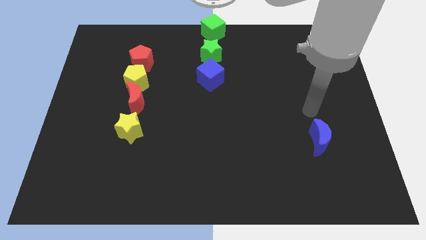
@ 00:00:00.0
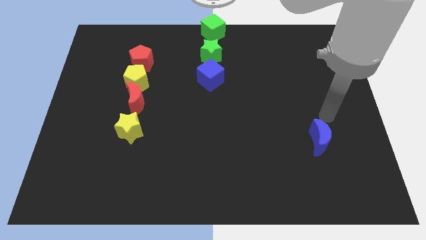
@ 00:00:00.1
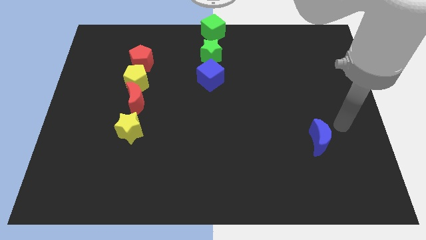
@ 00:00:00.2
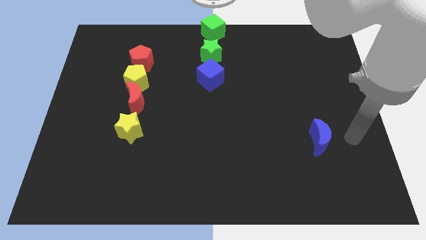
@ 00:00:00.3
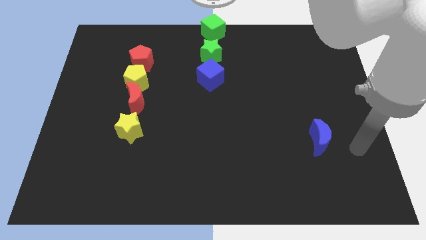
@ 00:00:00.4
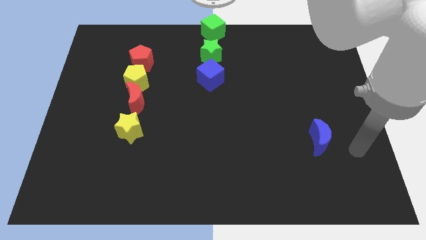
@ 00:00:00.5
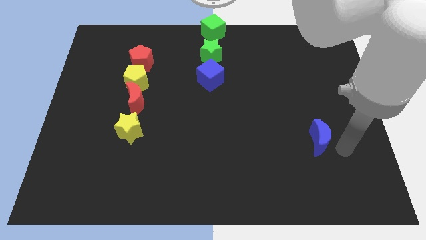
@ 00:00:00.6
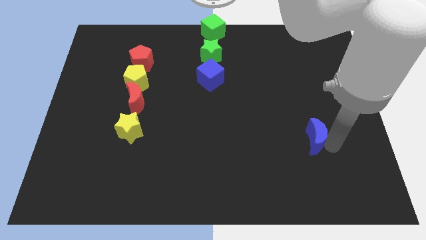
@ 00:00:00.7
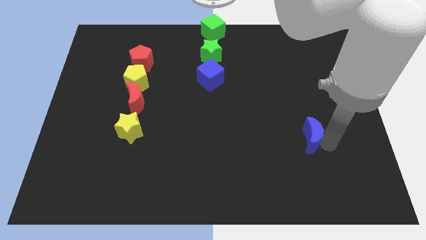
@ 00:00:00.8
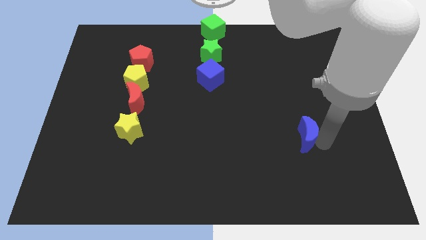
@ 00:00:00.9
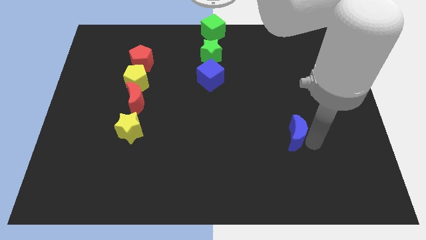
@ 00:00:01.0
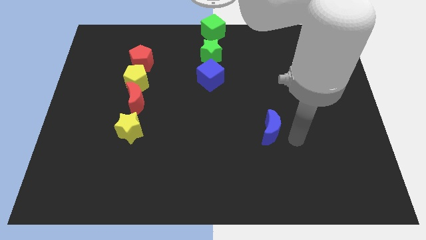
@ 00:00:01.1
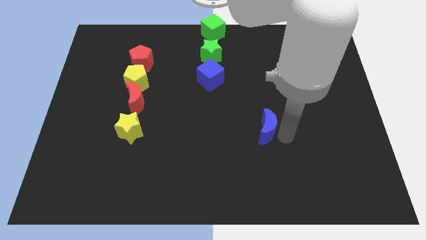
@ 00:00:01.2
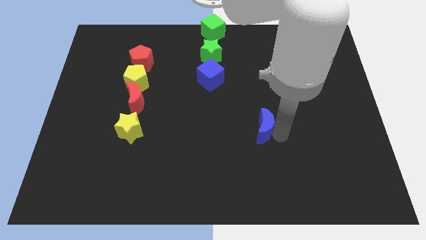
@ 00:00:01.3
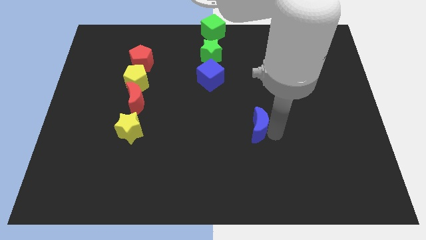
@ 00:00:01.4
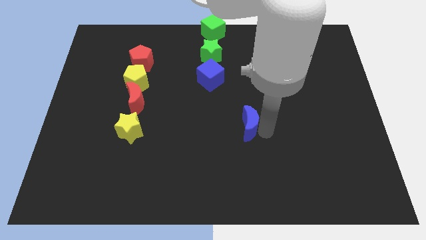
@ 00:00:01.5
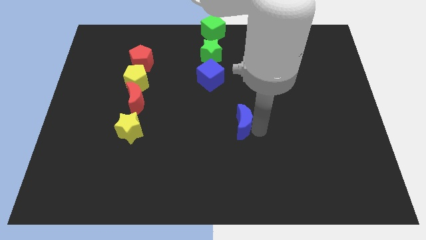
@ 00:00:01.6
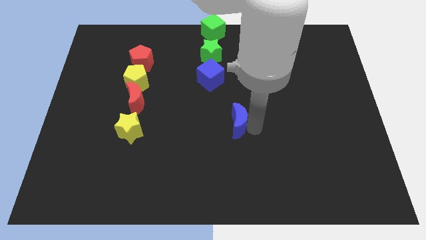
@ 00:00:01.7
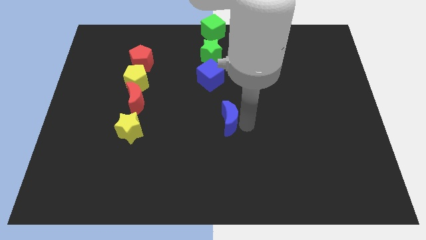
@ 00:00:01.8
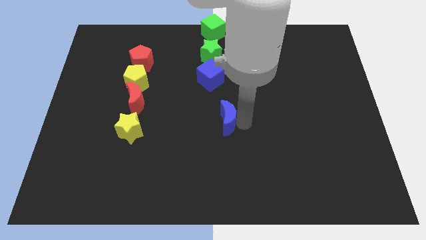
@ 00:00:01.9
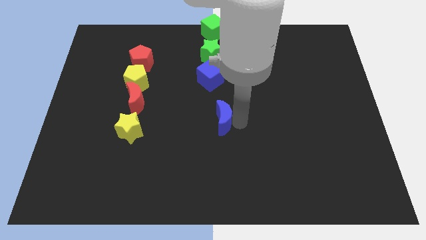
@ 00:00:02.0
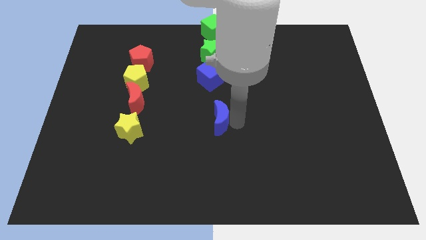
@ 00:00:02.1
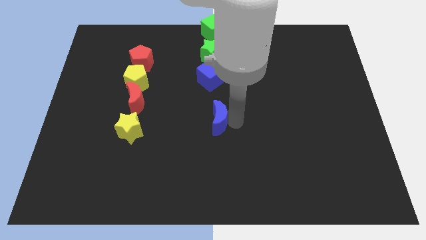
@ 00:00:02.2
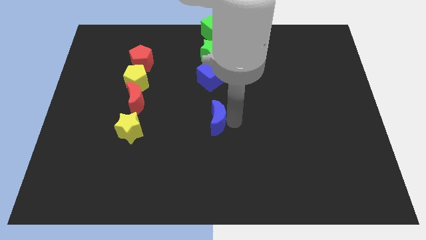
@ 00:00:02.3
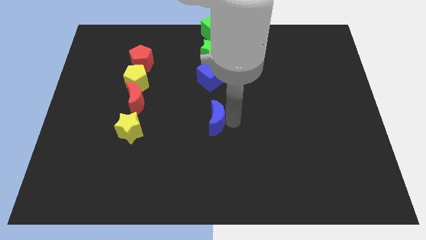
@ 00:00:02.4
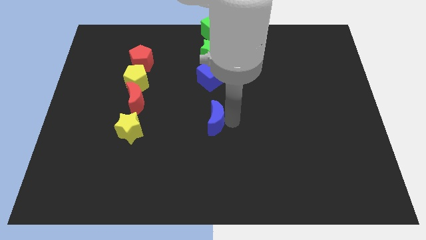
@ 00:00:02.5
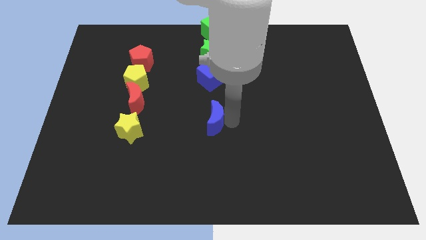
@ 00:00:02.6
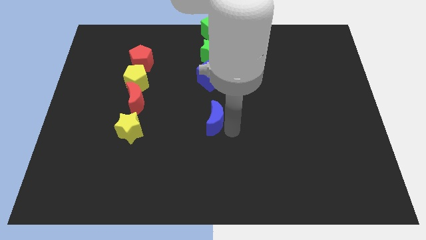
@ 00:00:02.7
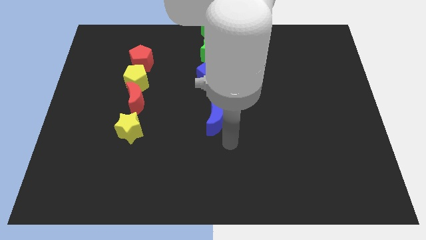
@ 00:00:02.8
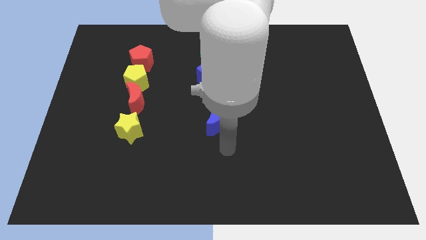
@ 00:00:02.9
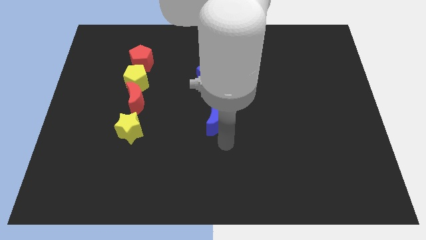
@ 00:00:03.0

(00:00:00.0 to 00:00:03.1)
slide the blue crescent slightly to the left

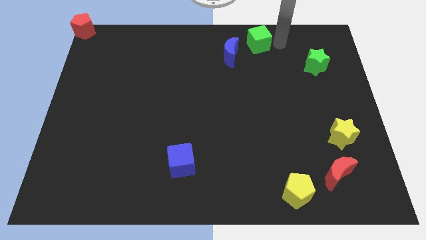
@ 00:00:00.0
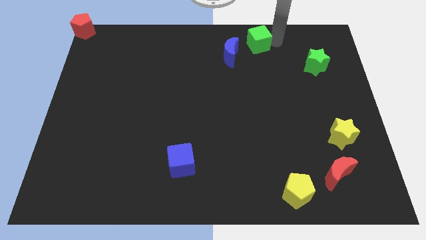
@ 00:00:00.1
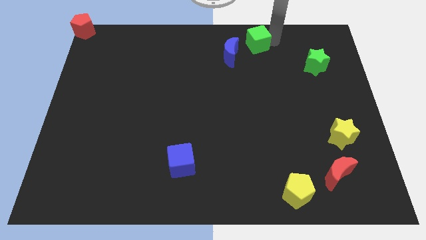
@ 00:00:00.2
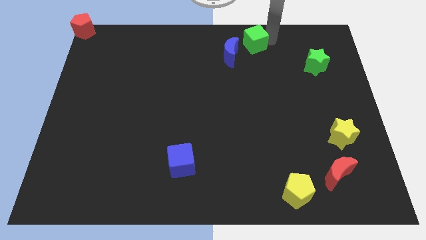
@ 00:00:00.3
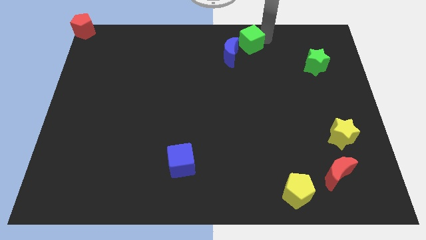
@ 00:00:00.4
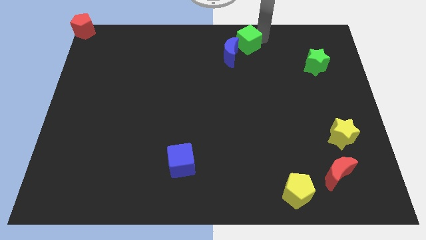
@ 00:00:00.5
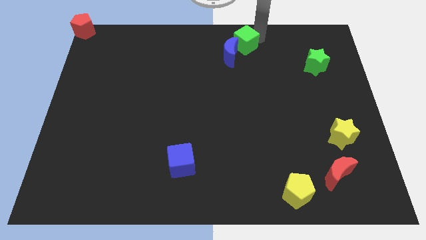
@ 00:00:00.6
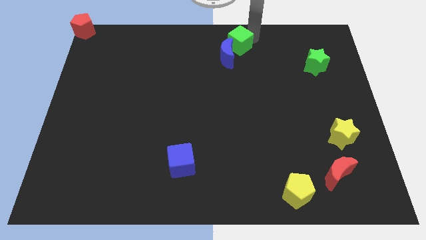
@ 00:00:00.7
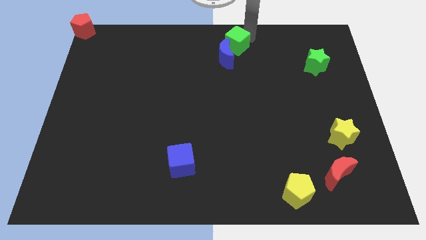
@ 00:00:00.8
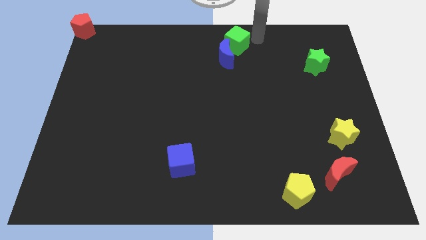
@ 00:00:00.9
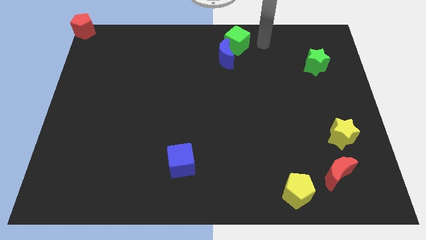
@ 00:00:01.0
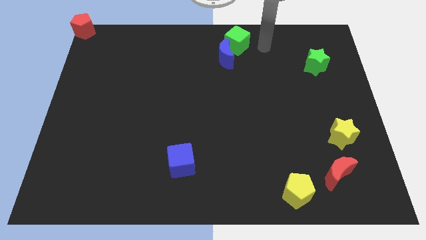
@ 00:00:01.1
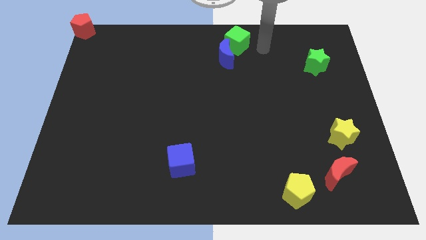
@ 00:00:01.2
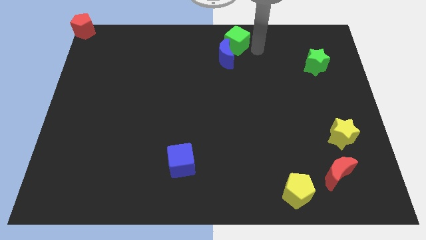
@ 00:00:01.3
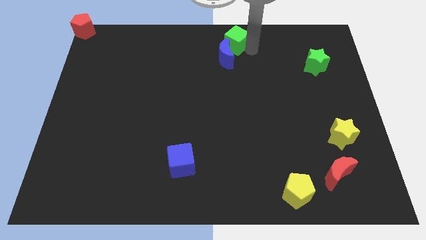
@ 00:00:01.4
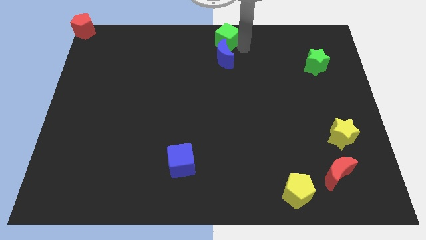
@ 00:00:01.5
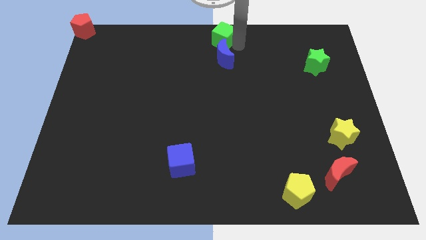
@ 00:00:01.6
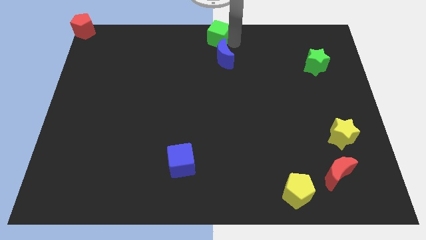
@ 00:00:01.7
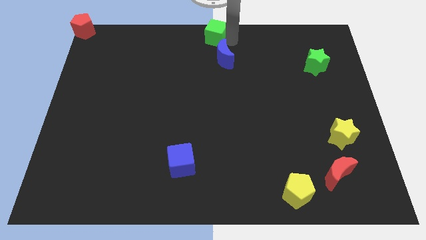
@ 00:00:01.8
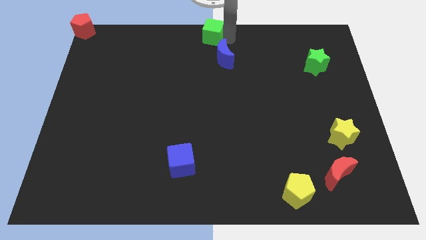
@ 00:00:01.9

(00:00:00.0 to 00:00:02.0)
move the green cube to the top center of the board

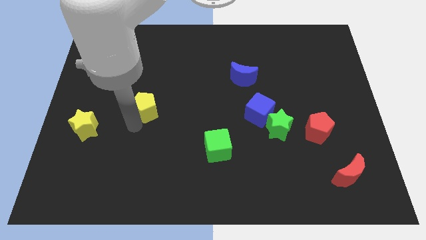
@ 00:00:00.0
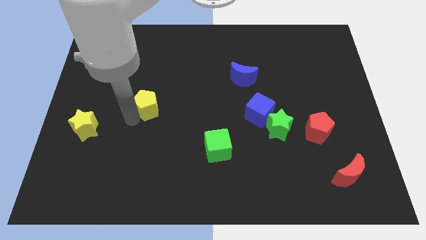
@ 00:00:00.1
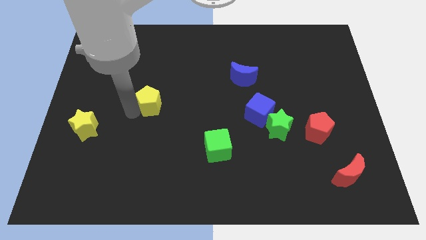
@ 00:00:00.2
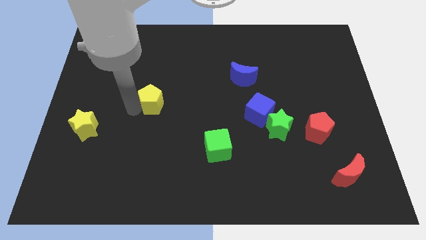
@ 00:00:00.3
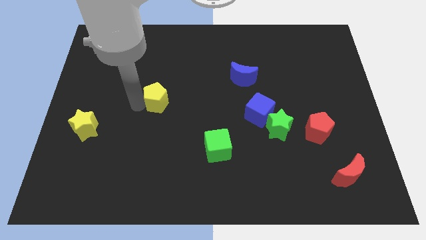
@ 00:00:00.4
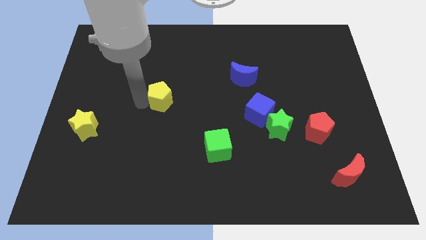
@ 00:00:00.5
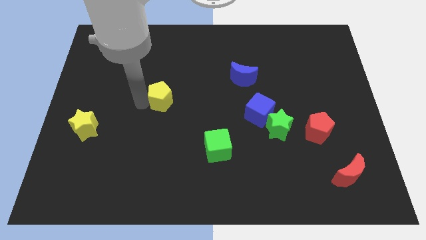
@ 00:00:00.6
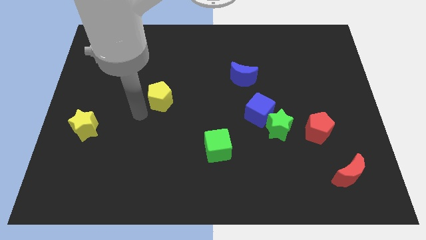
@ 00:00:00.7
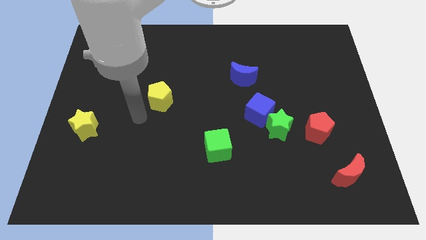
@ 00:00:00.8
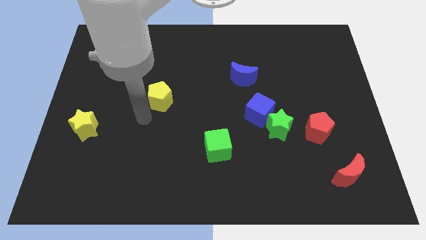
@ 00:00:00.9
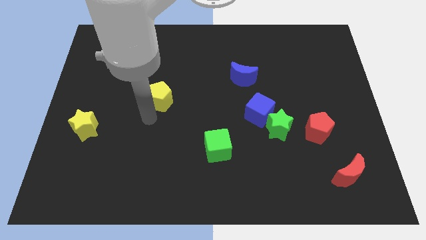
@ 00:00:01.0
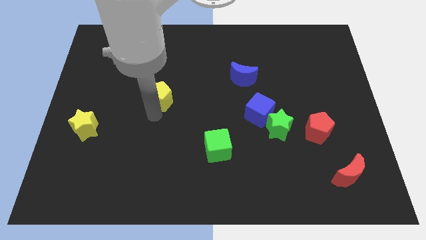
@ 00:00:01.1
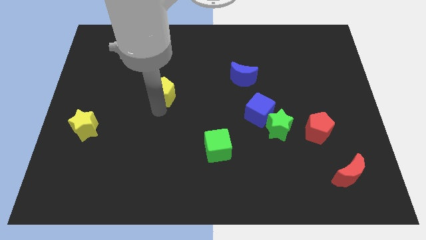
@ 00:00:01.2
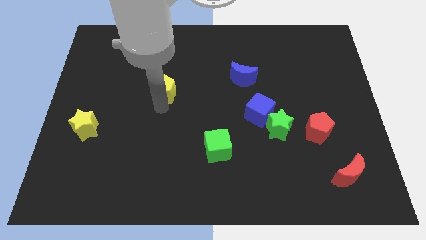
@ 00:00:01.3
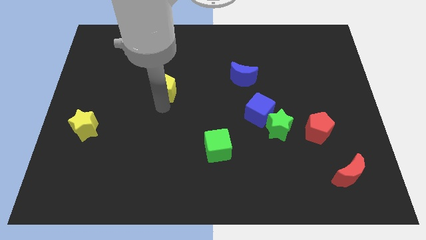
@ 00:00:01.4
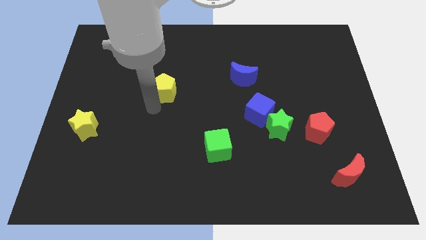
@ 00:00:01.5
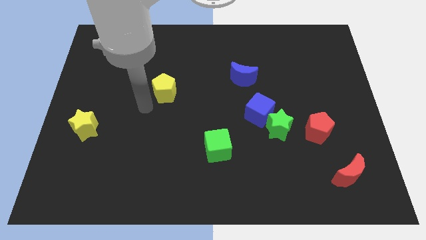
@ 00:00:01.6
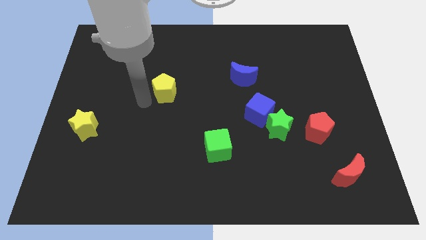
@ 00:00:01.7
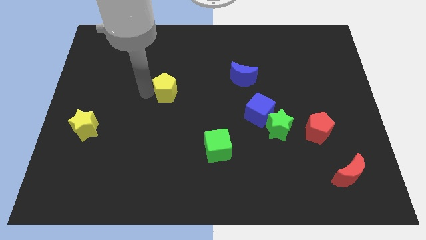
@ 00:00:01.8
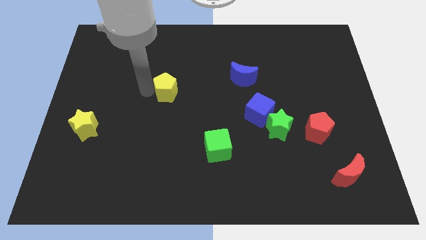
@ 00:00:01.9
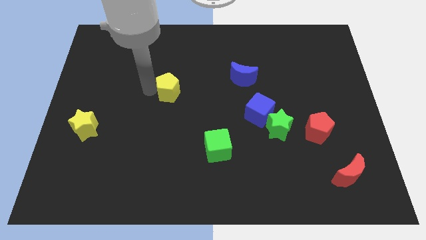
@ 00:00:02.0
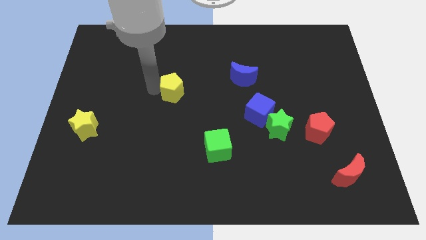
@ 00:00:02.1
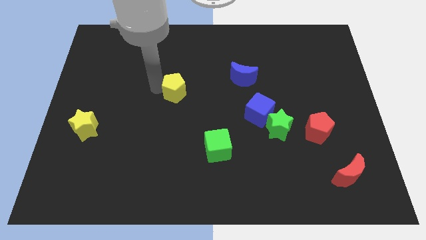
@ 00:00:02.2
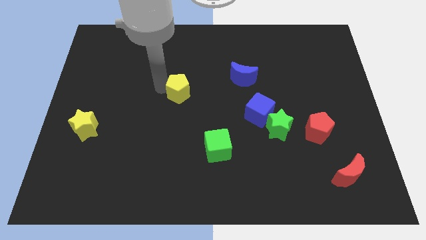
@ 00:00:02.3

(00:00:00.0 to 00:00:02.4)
move the yellow pentagon to the center

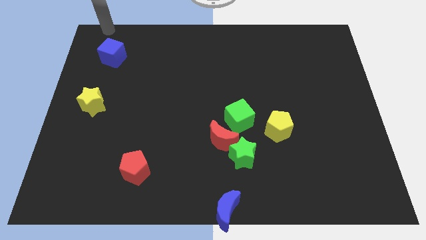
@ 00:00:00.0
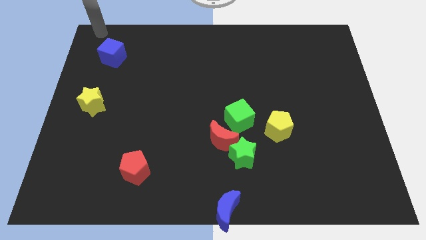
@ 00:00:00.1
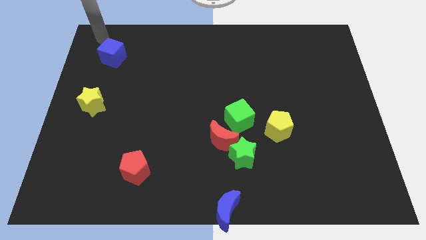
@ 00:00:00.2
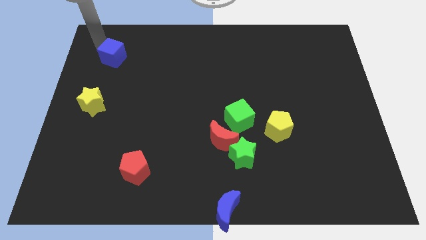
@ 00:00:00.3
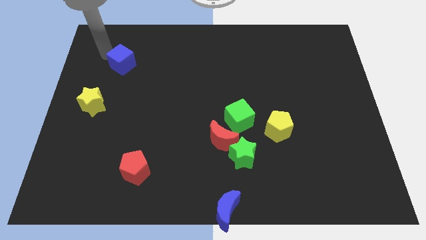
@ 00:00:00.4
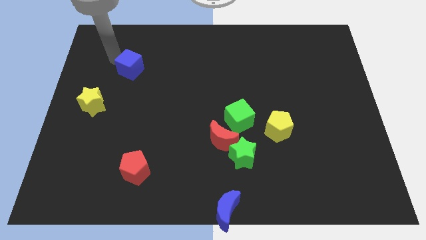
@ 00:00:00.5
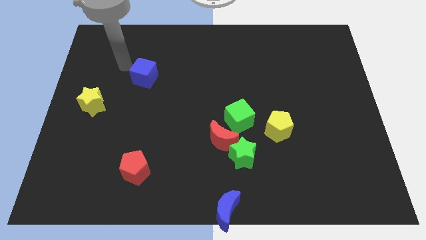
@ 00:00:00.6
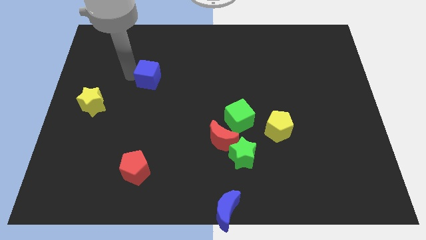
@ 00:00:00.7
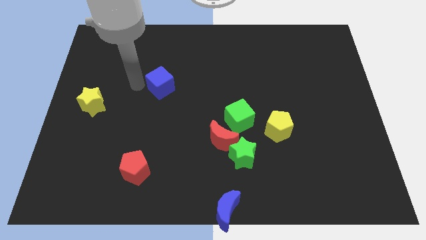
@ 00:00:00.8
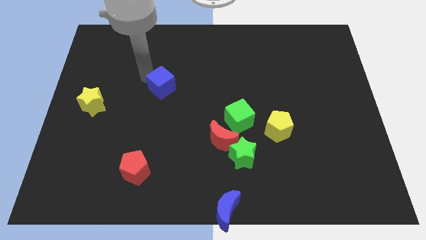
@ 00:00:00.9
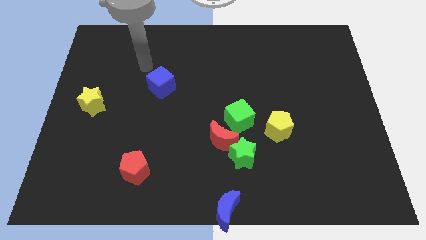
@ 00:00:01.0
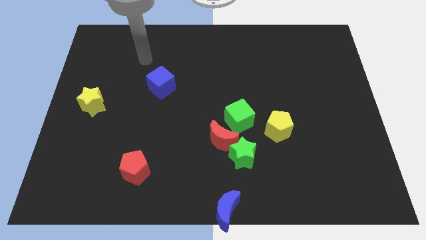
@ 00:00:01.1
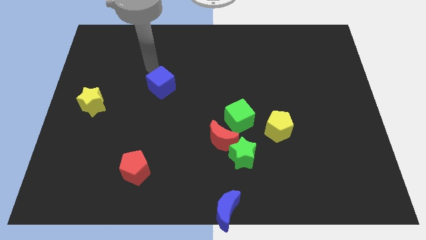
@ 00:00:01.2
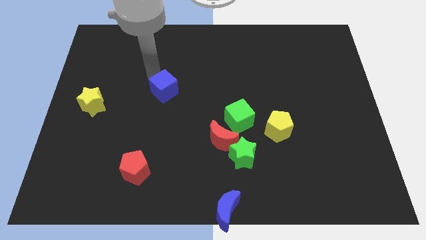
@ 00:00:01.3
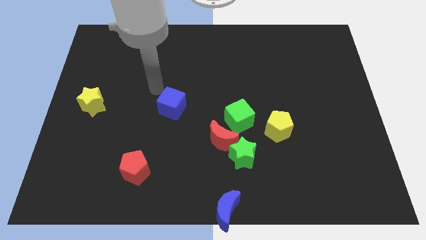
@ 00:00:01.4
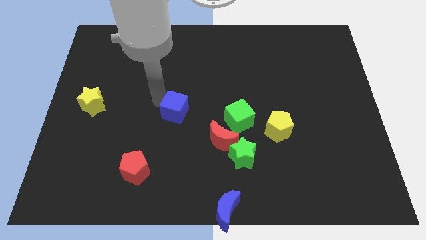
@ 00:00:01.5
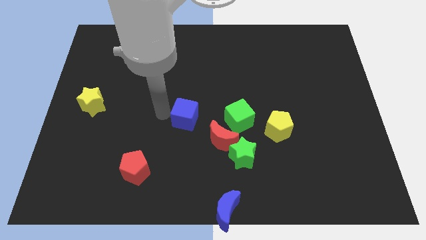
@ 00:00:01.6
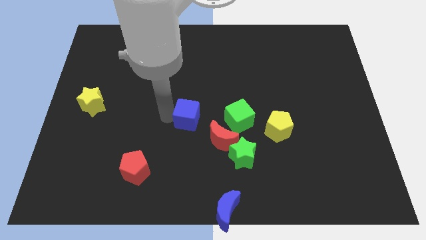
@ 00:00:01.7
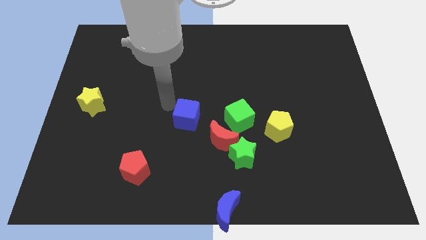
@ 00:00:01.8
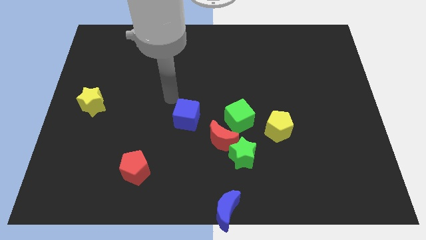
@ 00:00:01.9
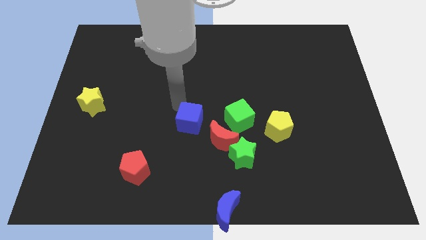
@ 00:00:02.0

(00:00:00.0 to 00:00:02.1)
slide blue cube towards red moon
